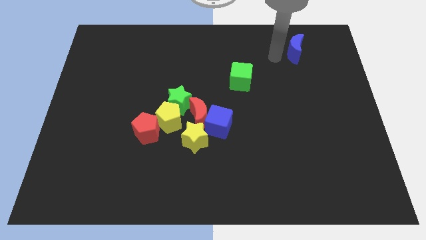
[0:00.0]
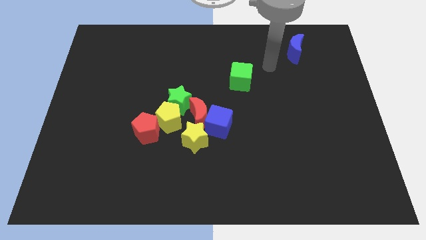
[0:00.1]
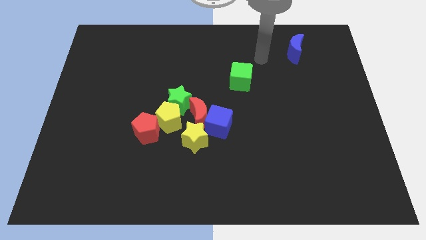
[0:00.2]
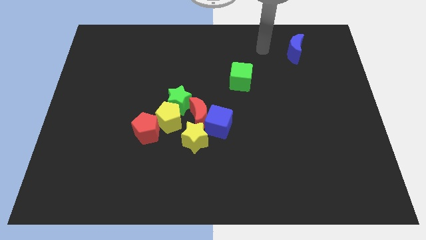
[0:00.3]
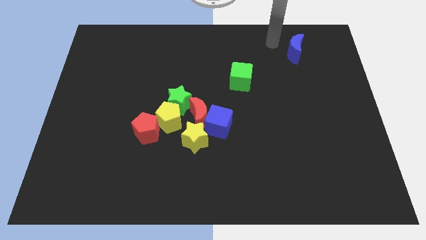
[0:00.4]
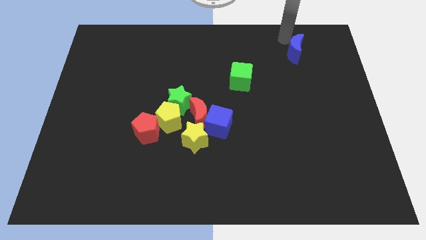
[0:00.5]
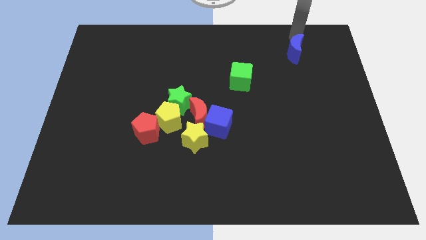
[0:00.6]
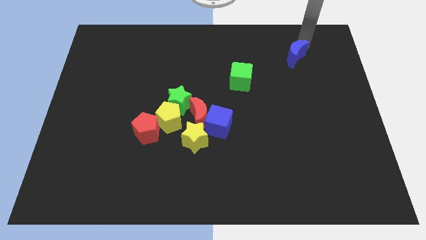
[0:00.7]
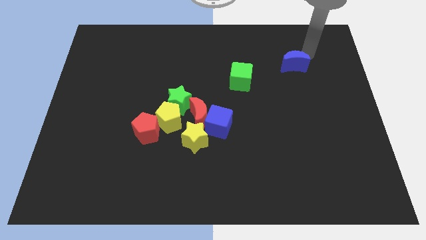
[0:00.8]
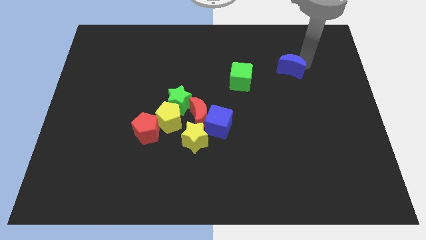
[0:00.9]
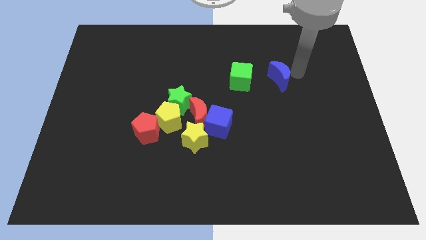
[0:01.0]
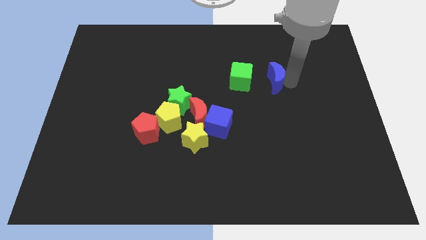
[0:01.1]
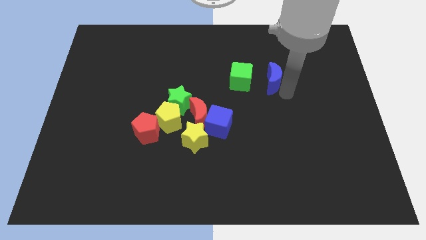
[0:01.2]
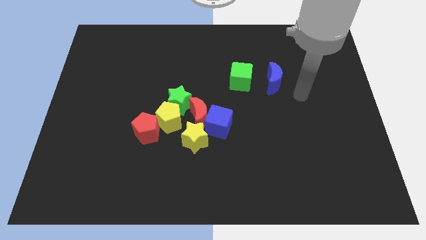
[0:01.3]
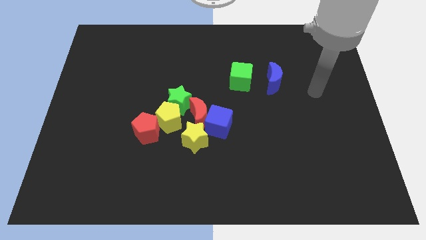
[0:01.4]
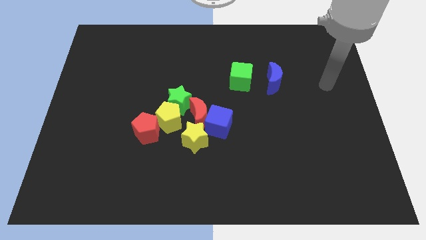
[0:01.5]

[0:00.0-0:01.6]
move the blue moon to the right of the green cube

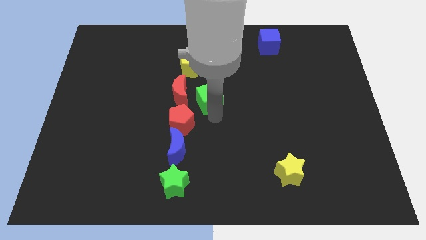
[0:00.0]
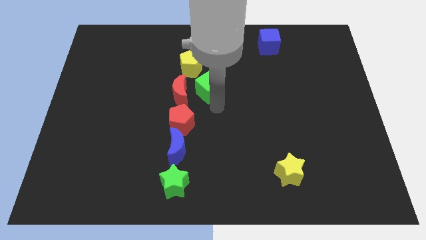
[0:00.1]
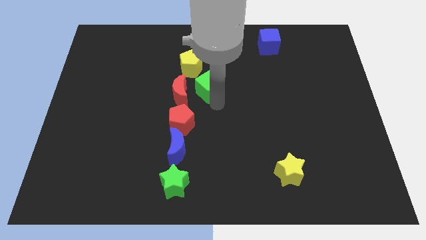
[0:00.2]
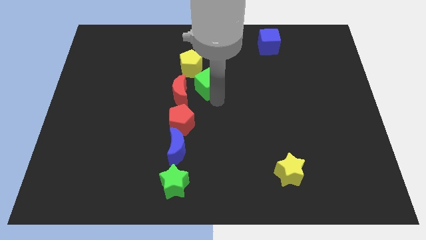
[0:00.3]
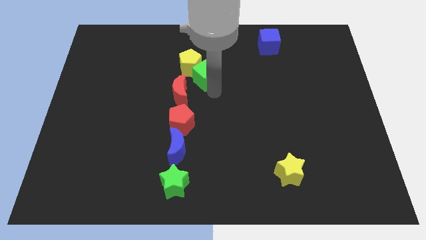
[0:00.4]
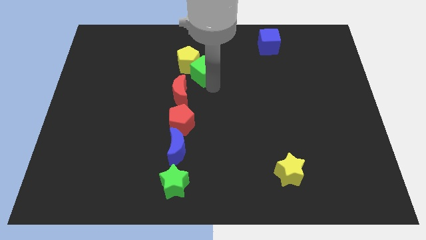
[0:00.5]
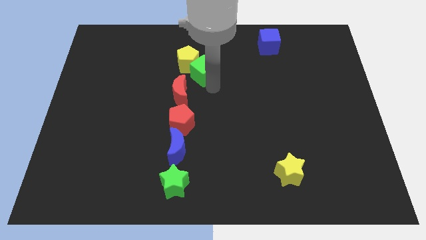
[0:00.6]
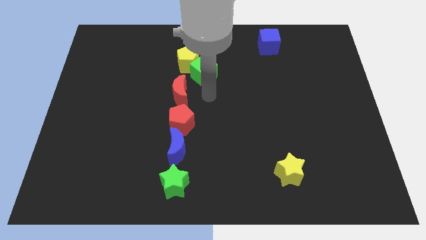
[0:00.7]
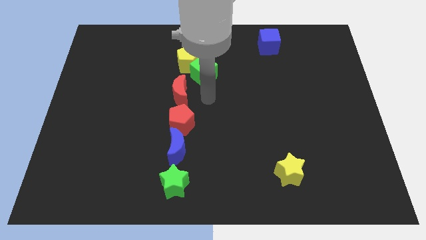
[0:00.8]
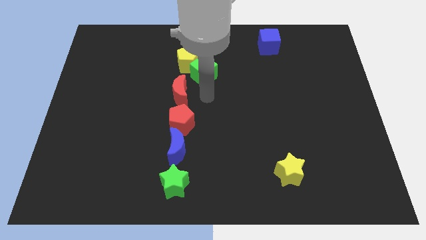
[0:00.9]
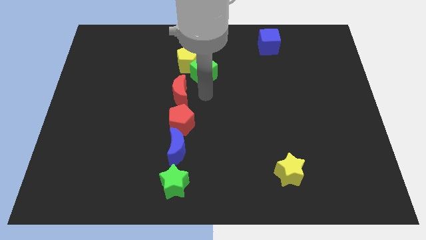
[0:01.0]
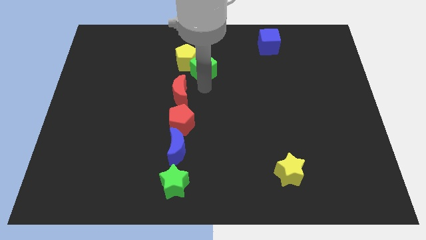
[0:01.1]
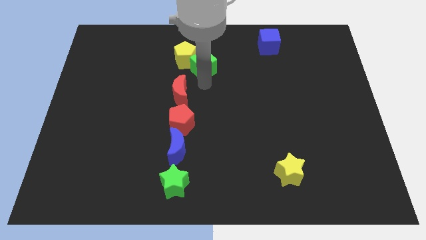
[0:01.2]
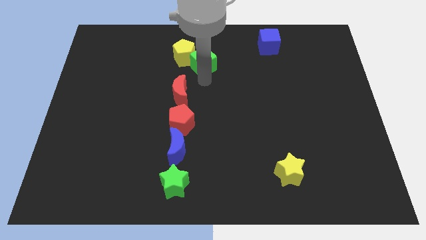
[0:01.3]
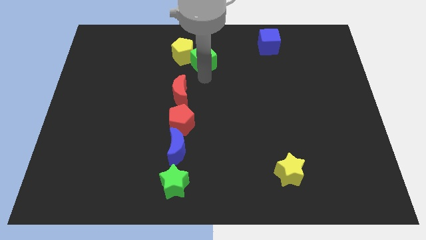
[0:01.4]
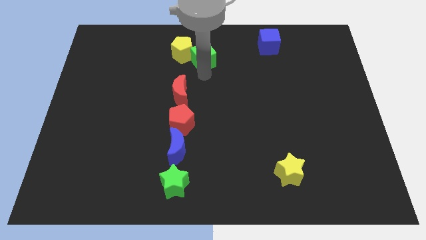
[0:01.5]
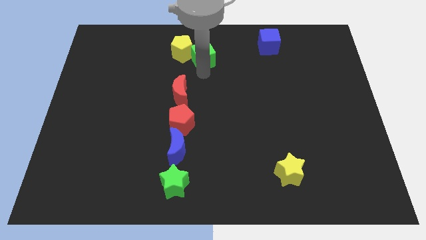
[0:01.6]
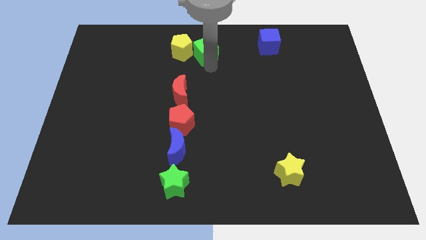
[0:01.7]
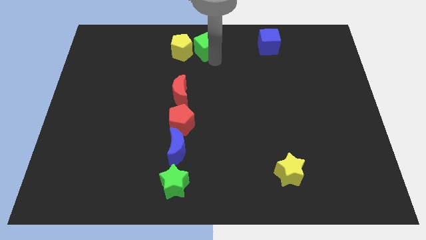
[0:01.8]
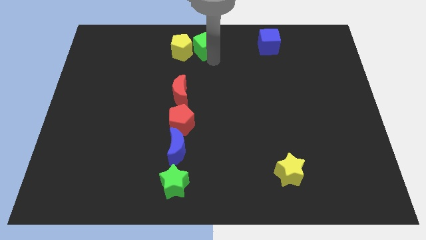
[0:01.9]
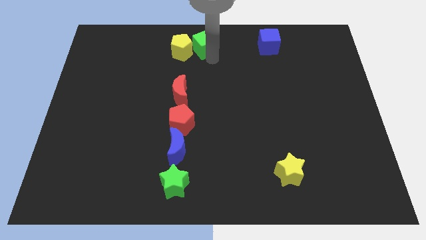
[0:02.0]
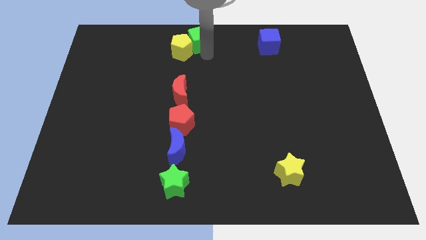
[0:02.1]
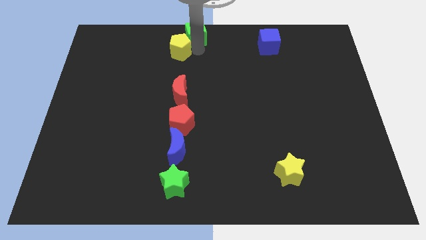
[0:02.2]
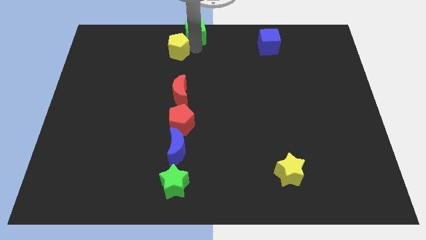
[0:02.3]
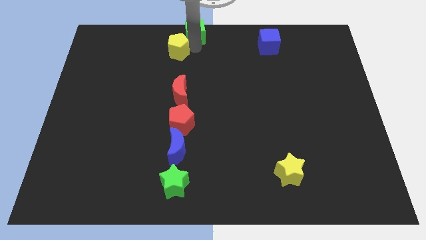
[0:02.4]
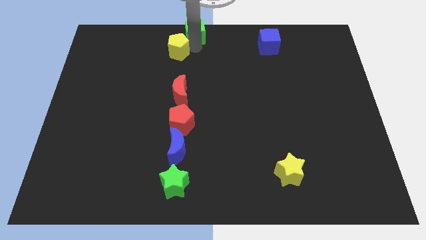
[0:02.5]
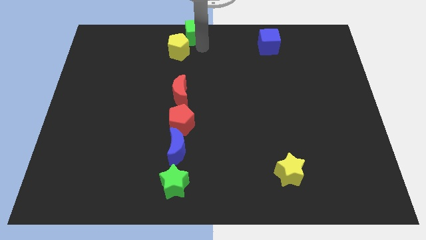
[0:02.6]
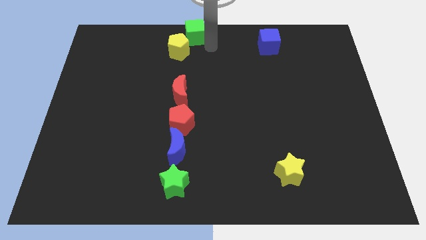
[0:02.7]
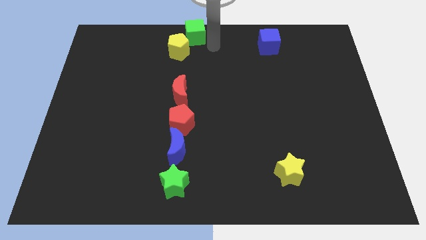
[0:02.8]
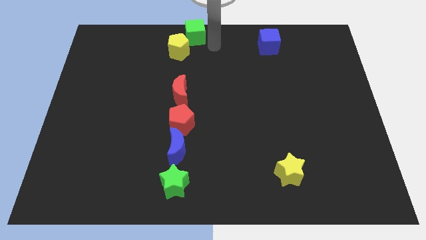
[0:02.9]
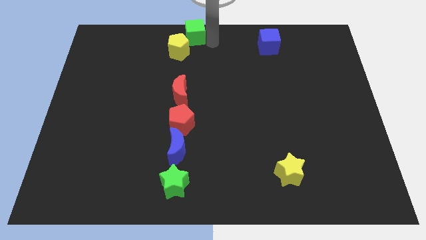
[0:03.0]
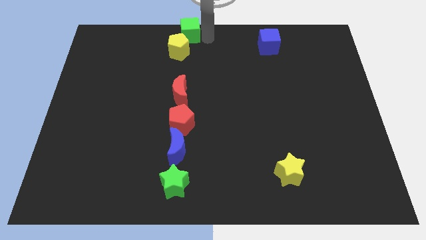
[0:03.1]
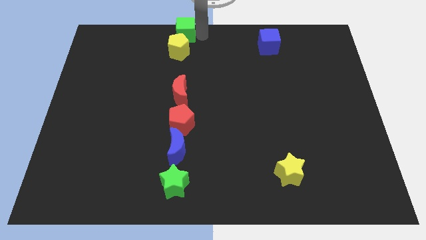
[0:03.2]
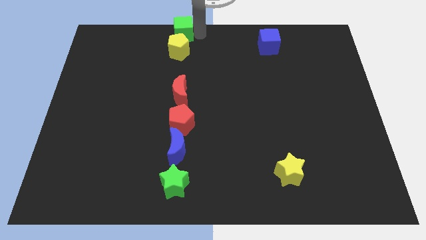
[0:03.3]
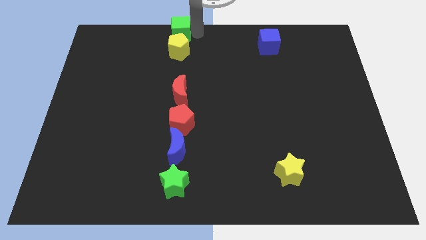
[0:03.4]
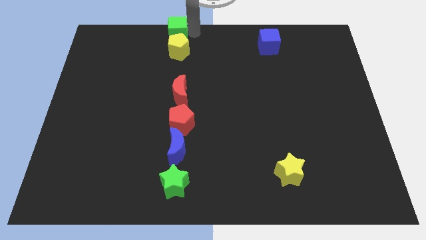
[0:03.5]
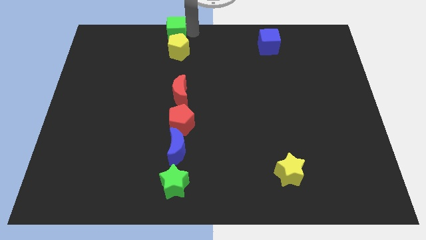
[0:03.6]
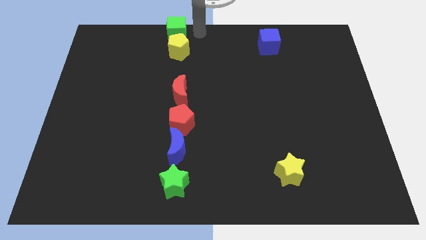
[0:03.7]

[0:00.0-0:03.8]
place green cube to the top of yellow pentagon

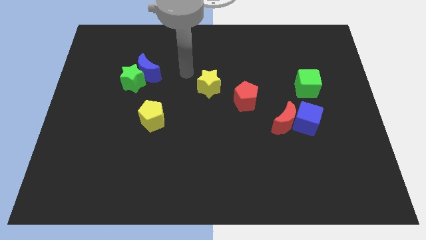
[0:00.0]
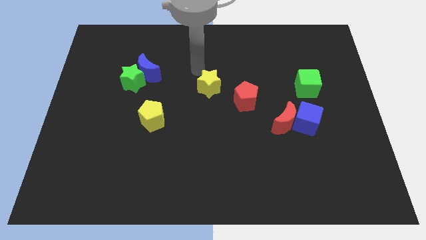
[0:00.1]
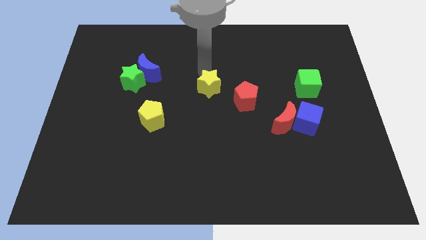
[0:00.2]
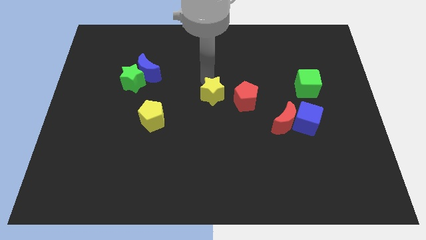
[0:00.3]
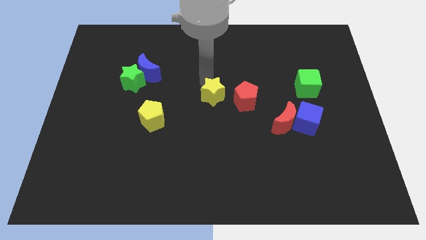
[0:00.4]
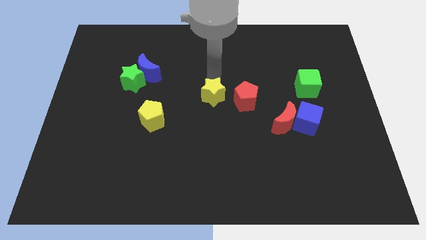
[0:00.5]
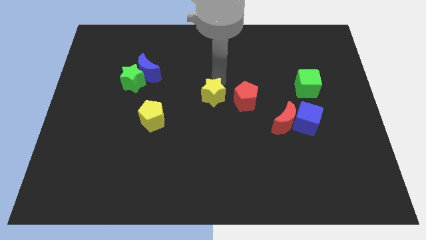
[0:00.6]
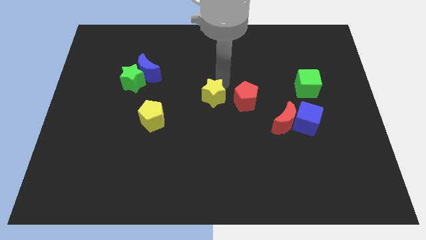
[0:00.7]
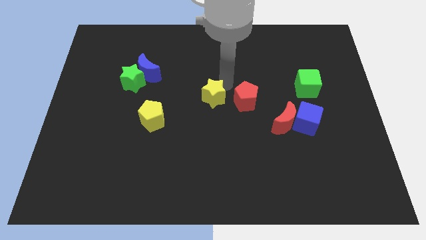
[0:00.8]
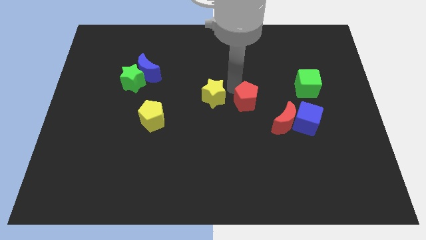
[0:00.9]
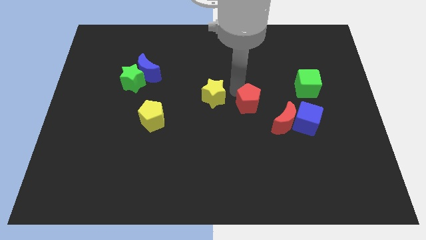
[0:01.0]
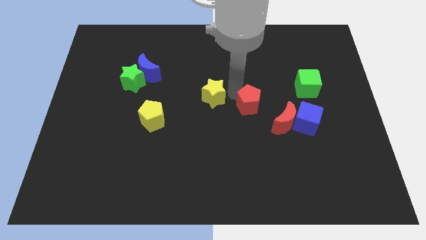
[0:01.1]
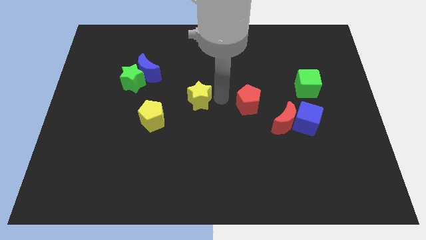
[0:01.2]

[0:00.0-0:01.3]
place a yellow star to the left of the red pentagon

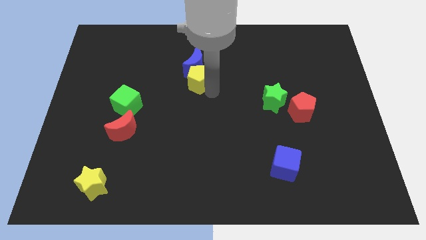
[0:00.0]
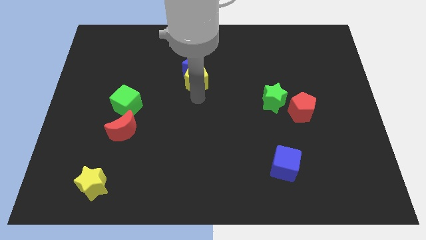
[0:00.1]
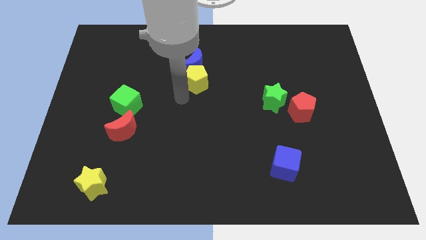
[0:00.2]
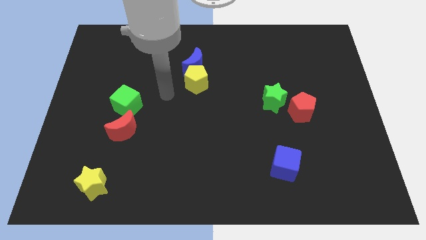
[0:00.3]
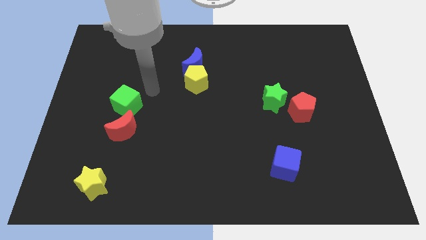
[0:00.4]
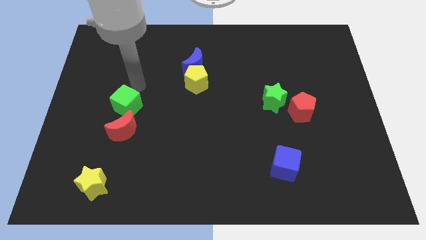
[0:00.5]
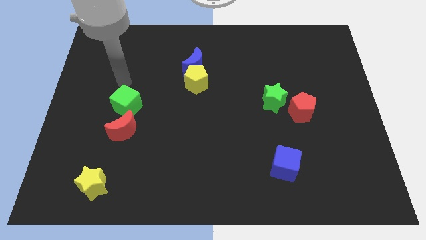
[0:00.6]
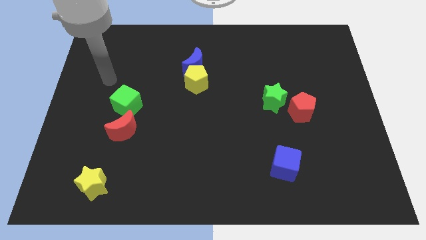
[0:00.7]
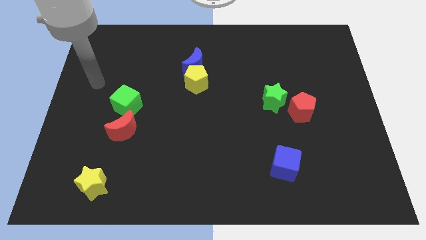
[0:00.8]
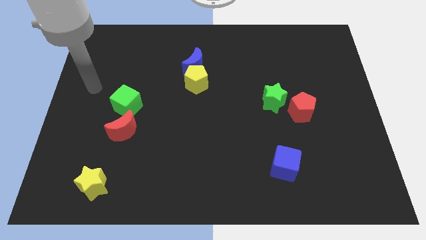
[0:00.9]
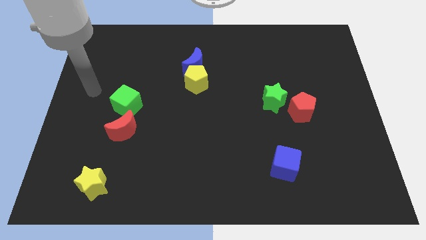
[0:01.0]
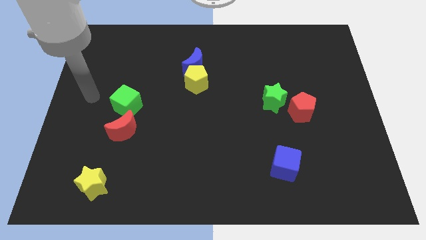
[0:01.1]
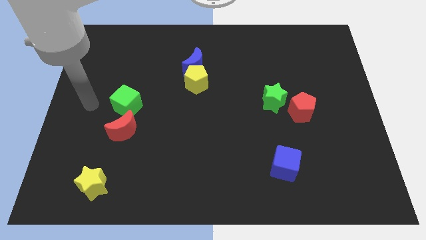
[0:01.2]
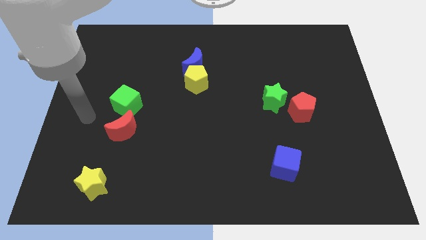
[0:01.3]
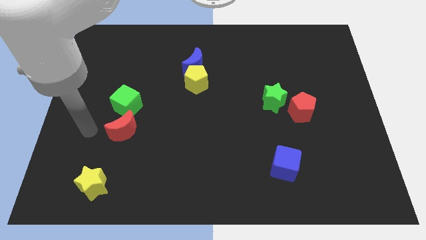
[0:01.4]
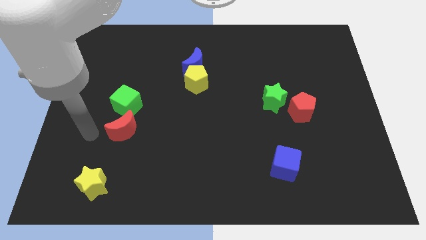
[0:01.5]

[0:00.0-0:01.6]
move the arm to the left of the red moon

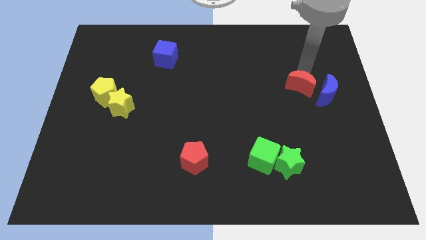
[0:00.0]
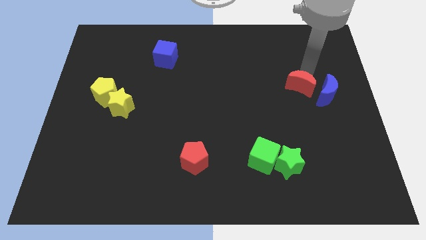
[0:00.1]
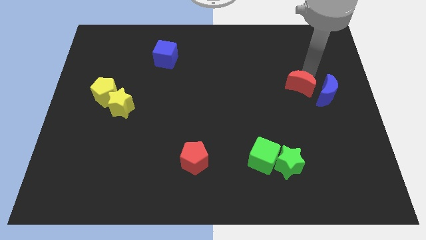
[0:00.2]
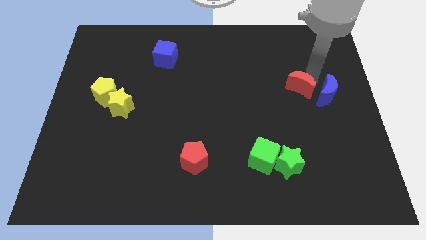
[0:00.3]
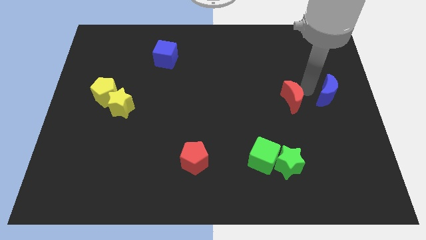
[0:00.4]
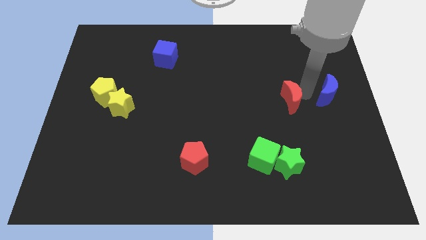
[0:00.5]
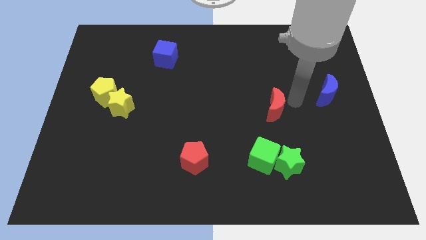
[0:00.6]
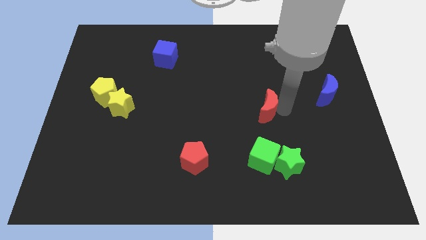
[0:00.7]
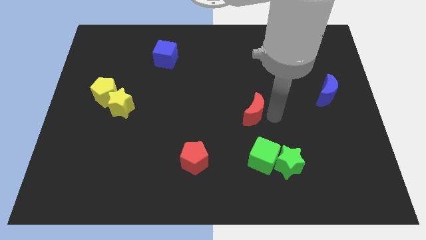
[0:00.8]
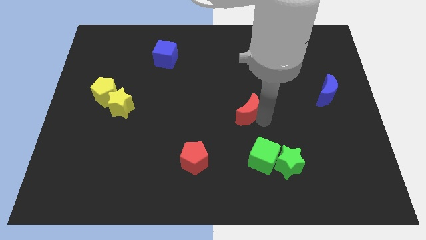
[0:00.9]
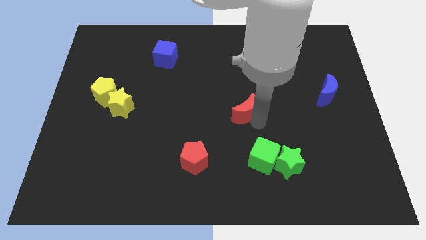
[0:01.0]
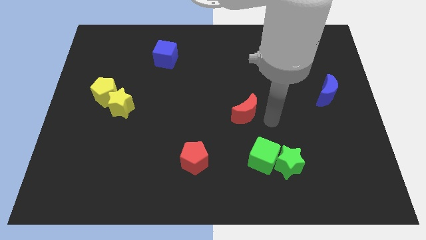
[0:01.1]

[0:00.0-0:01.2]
move the red moon slightly to the left
